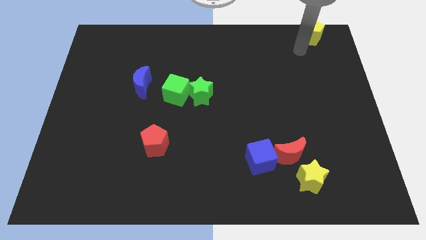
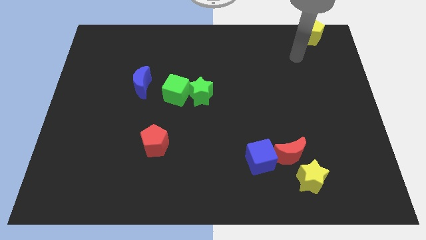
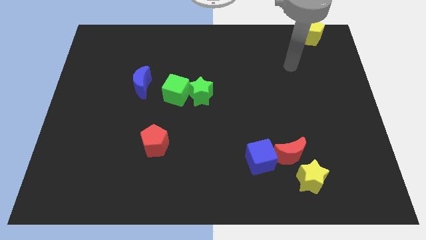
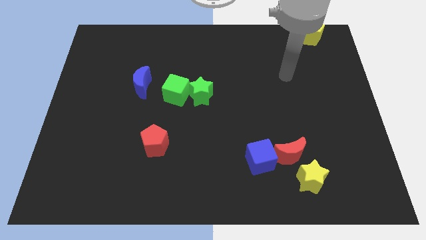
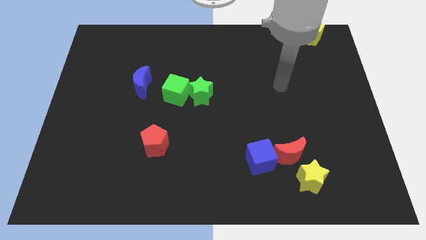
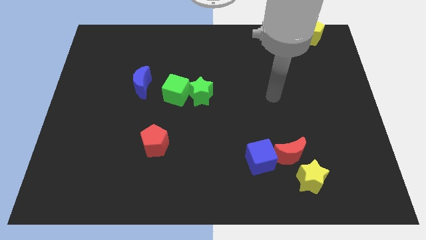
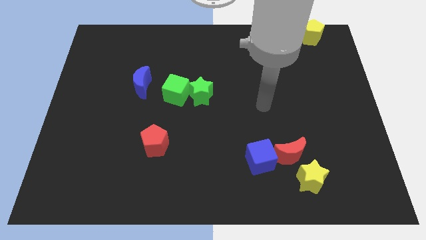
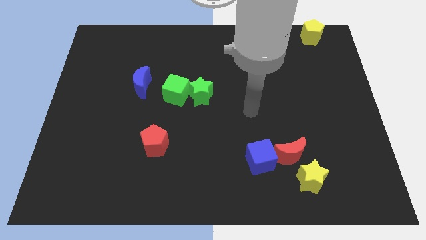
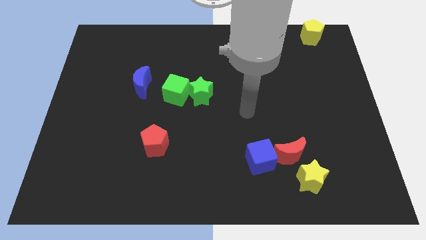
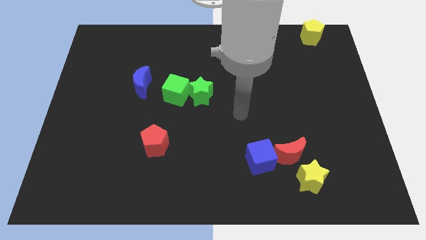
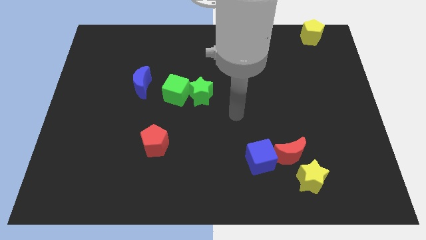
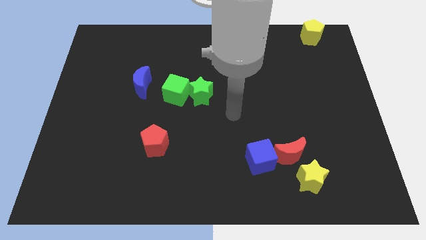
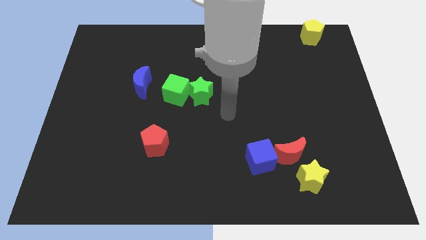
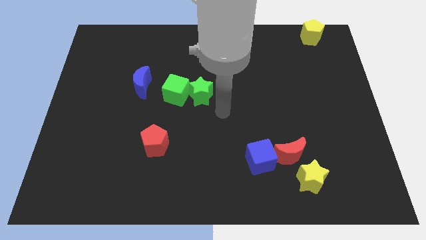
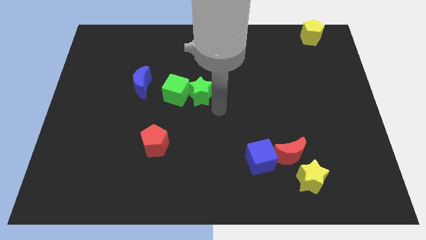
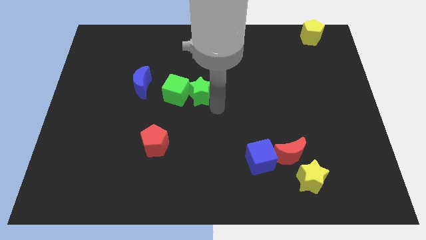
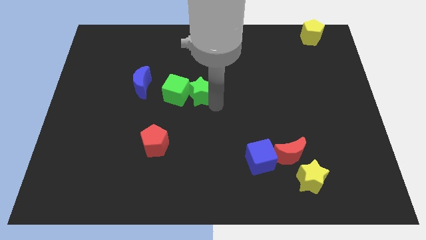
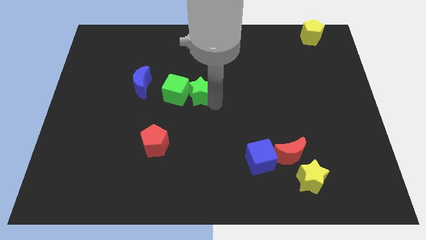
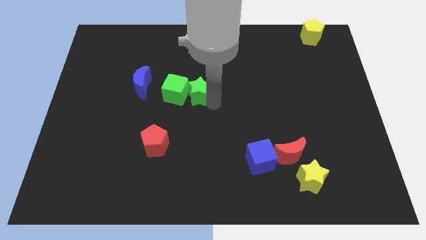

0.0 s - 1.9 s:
move green star into green cube

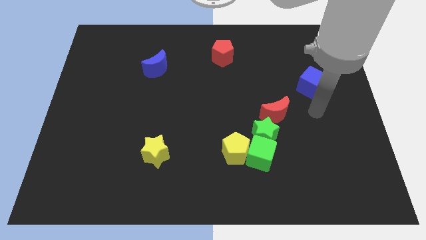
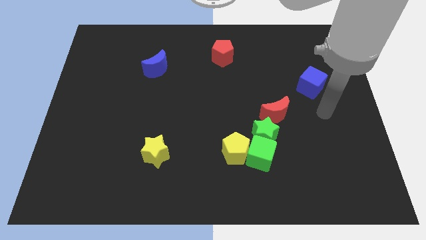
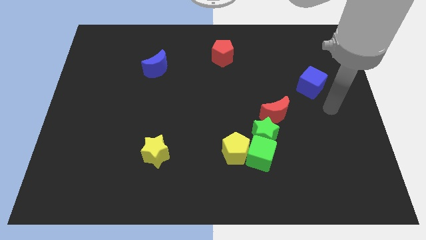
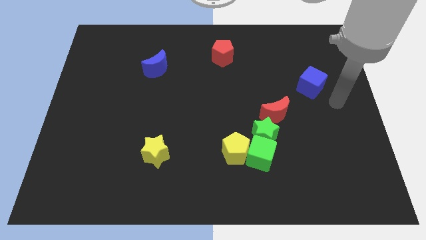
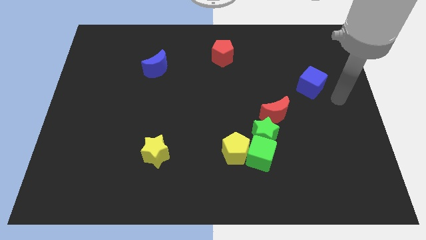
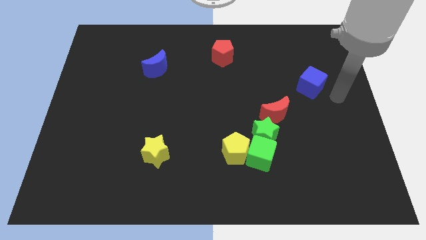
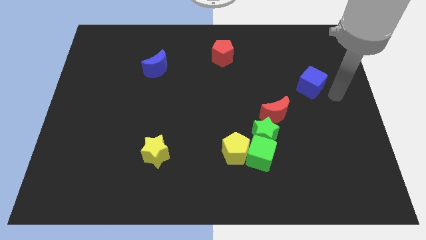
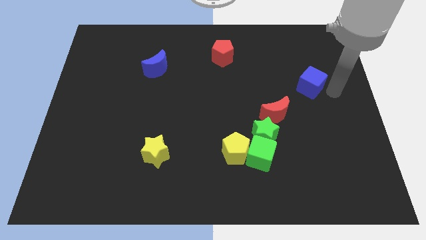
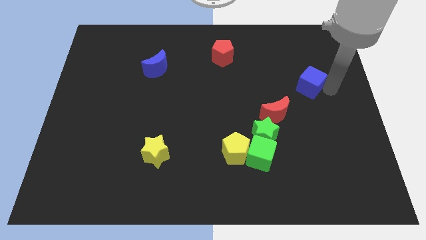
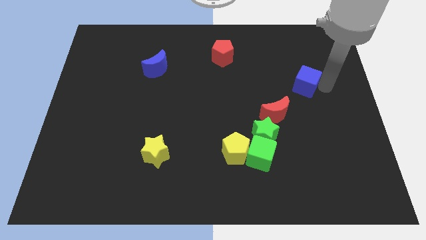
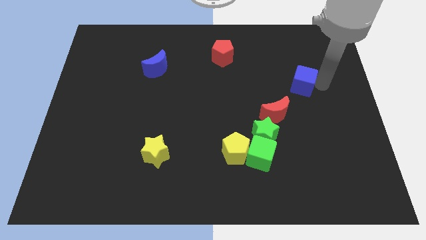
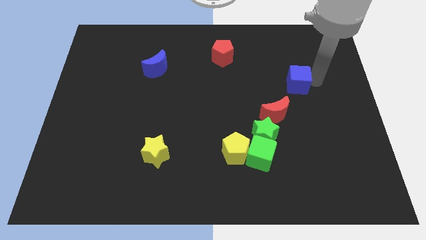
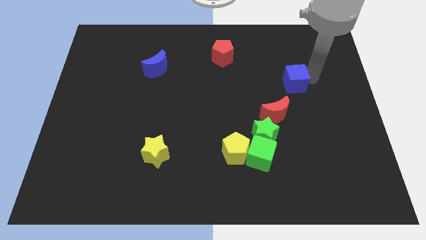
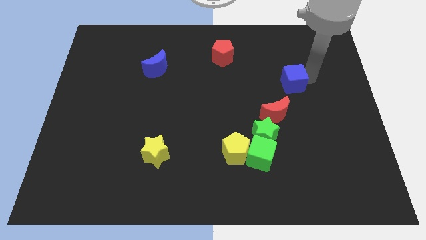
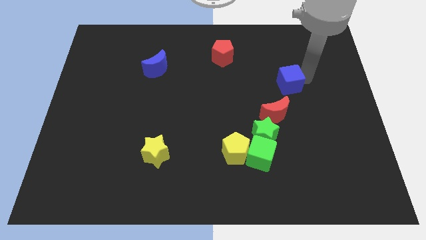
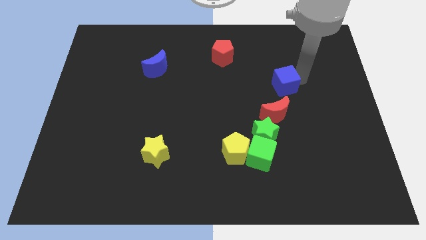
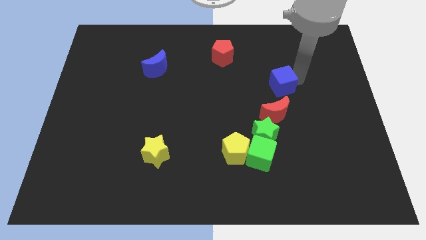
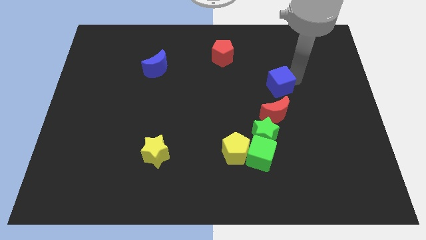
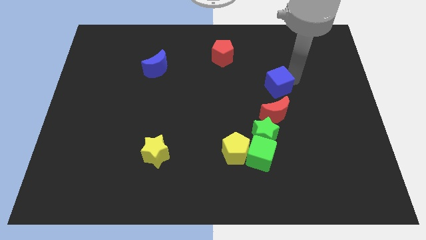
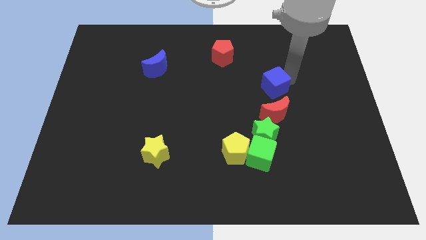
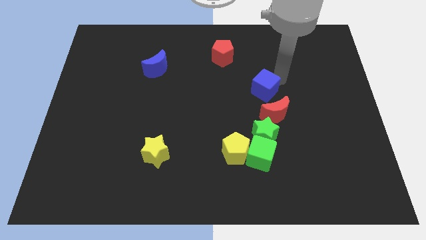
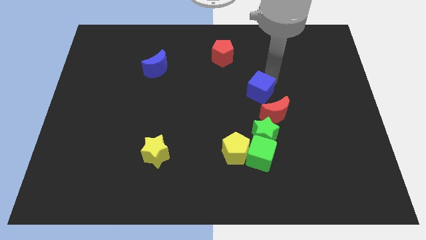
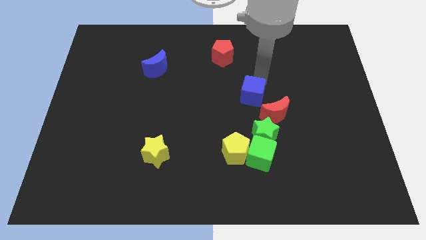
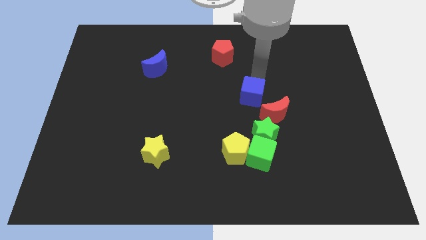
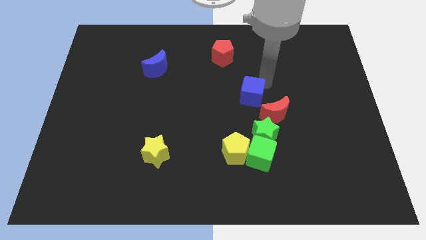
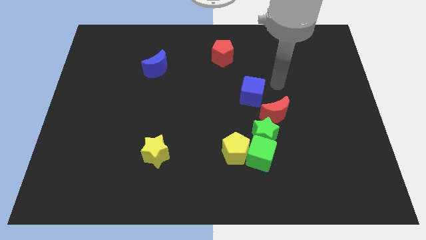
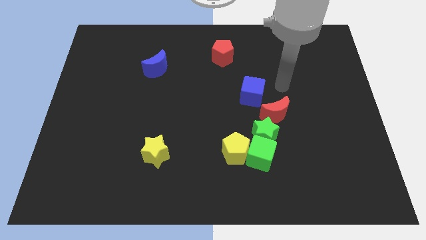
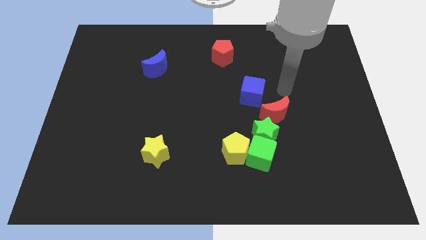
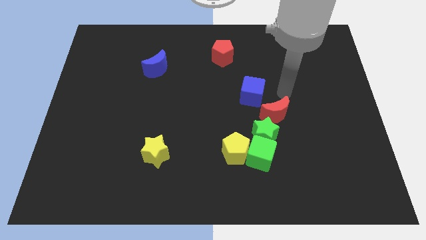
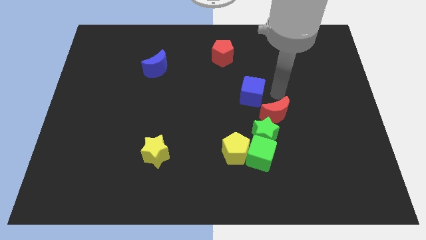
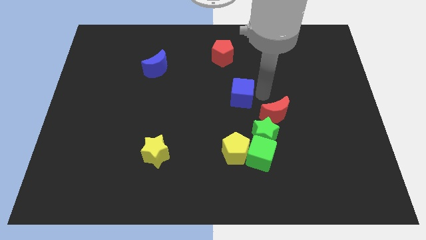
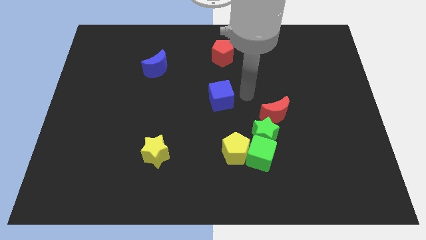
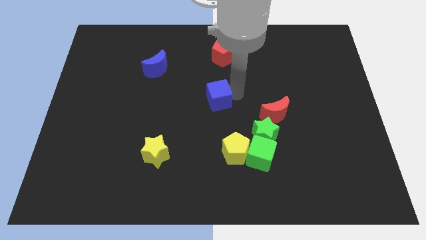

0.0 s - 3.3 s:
place the blue cube vertically below the red pentagon

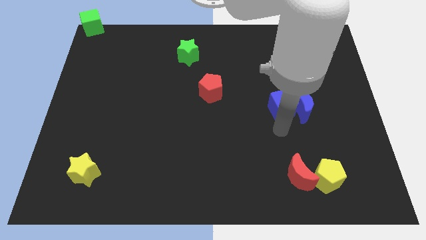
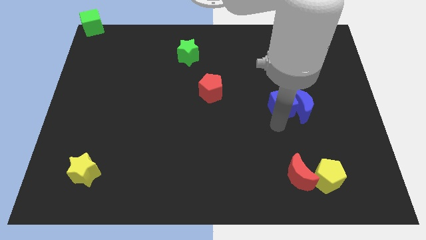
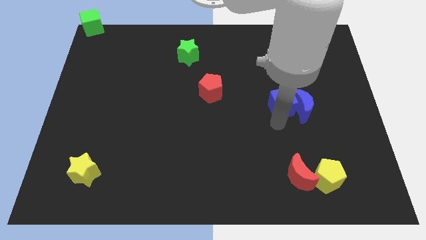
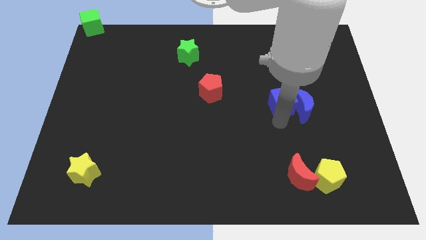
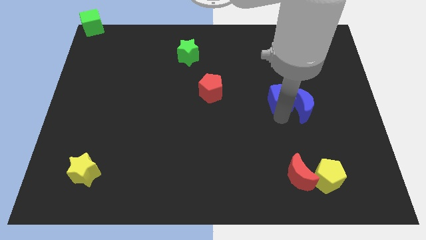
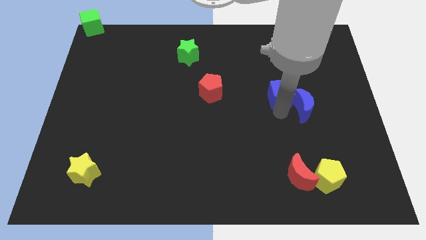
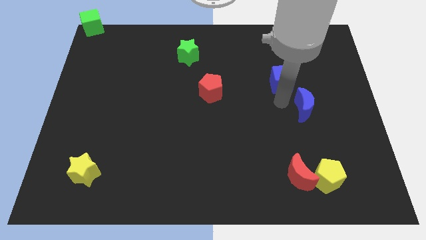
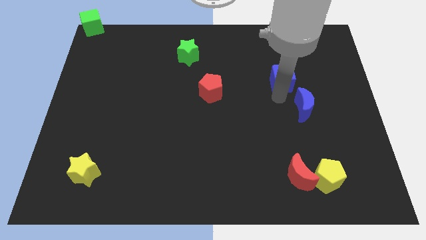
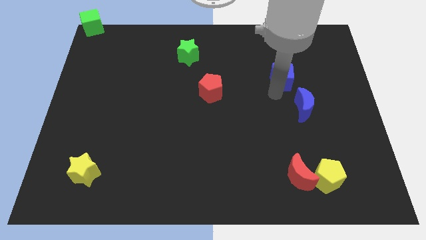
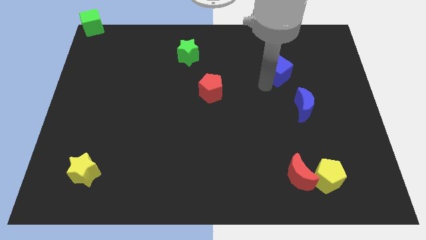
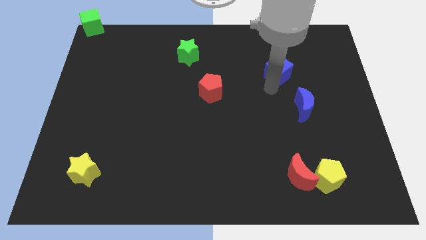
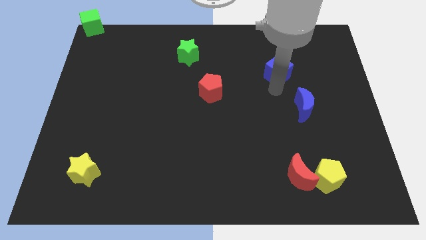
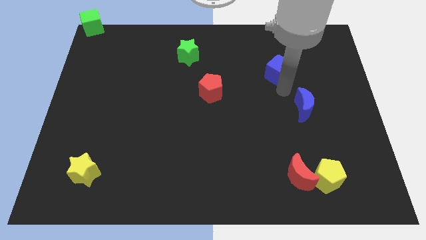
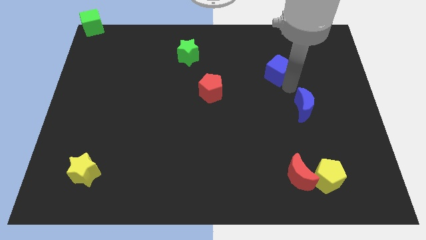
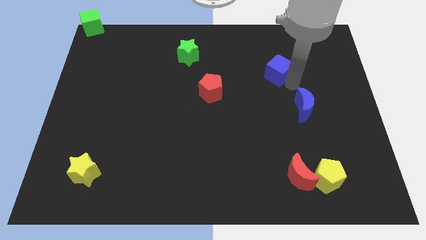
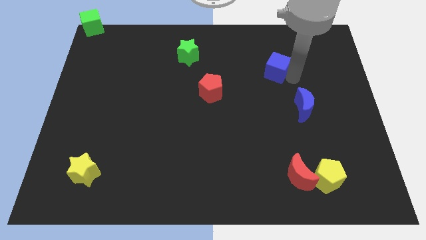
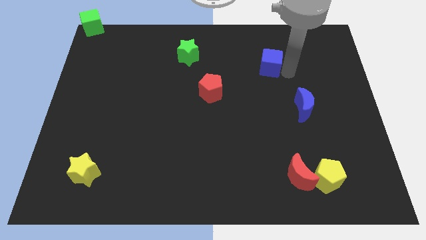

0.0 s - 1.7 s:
move the blue cube away from the left side of the blue crescent

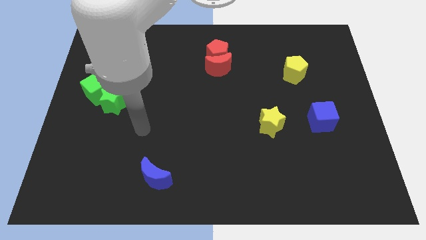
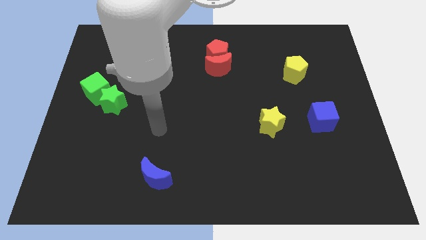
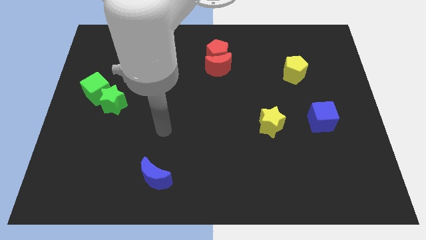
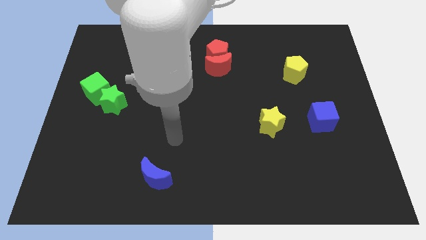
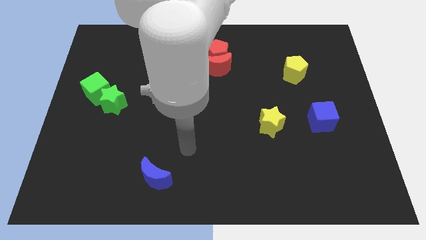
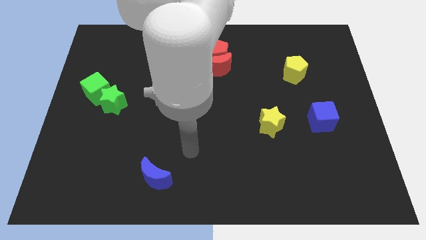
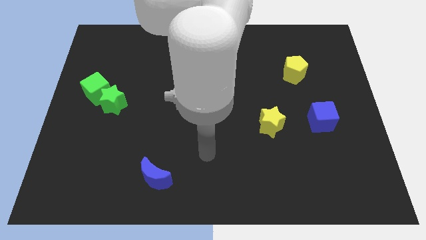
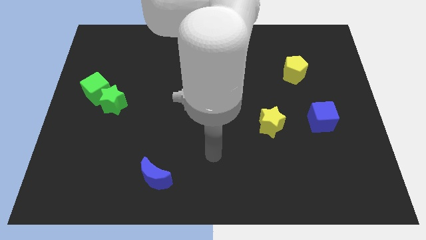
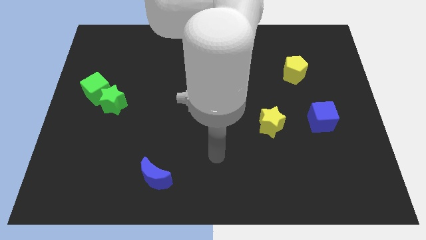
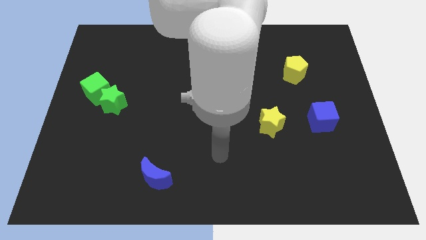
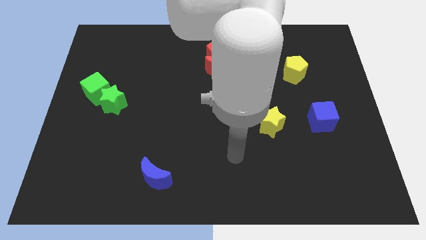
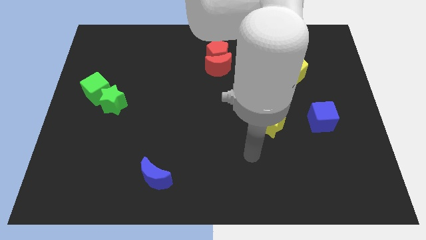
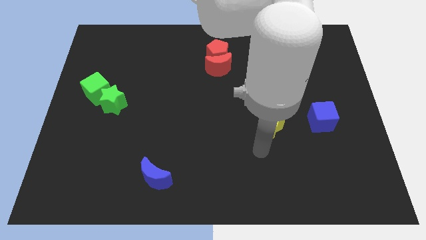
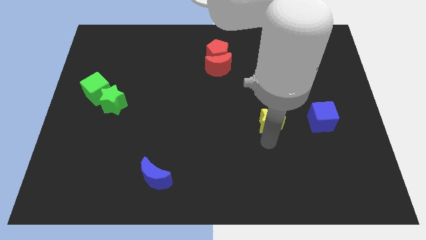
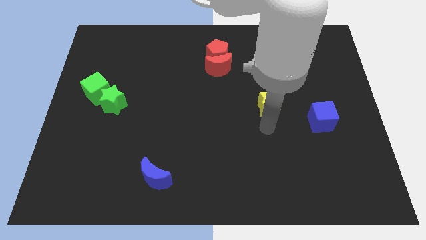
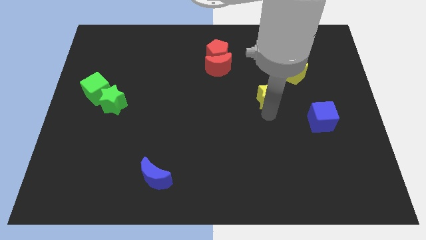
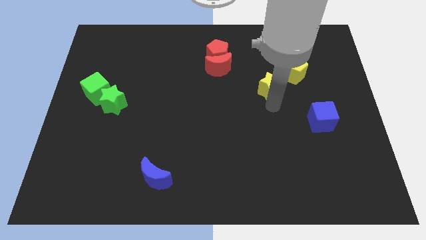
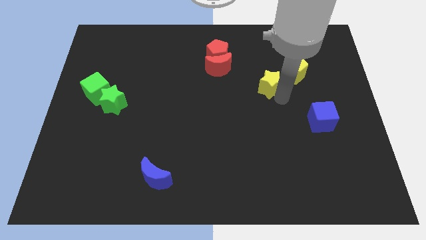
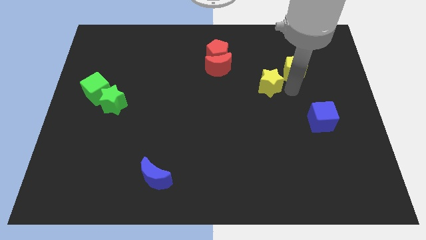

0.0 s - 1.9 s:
move the yellow star close to the yellow pentagon

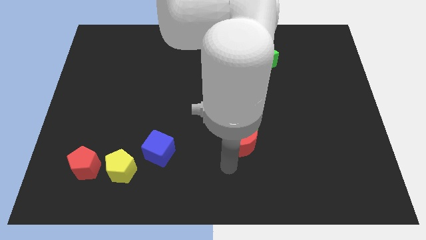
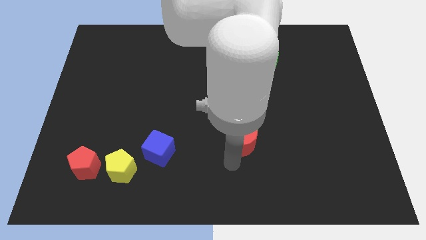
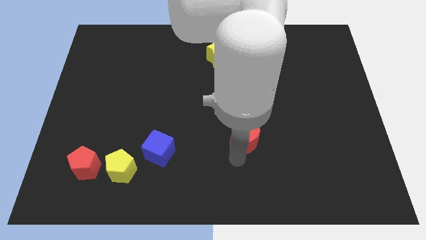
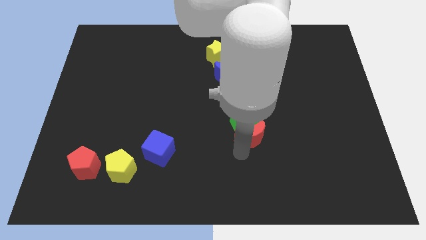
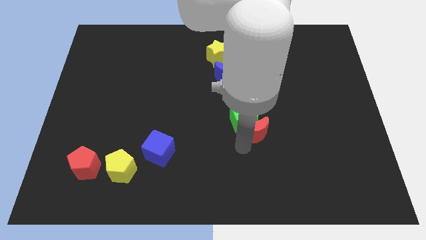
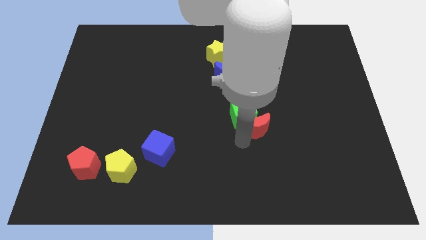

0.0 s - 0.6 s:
push the red moon into the green cube
